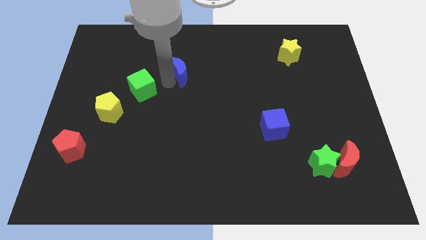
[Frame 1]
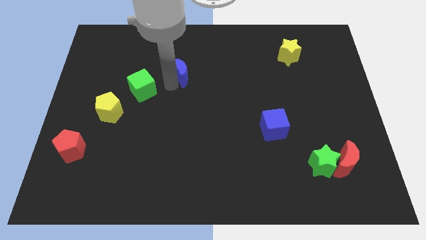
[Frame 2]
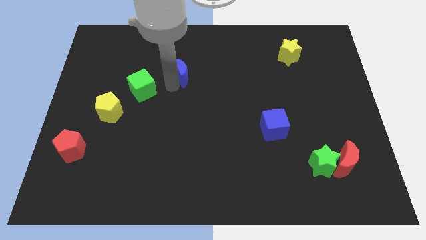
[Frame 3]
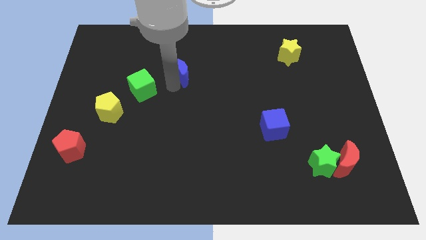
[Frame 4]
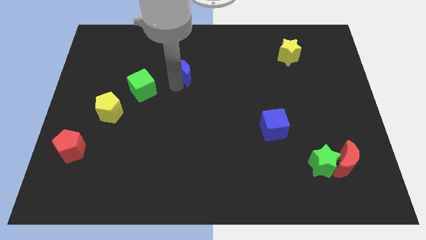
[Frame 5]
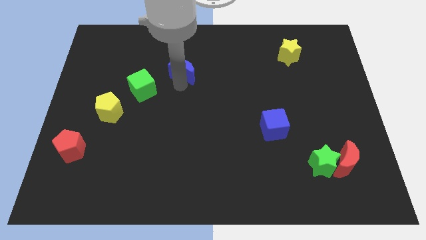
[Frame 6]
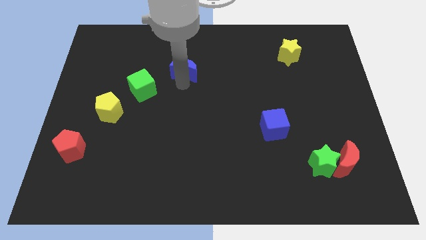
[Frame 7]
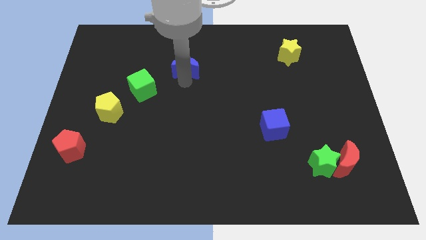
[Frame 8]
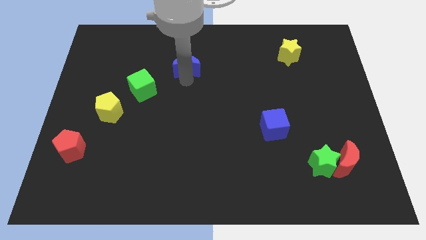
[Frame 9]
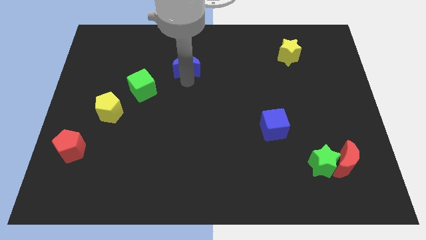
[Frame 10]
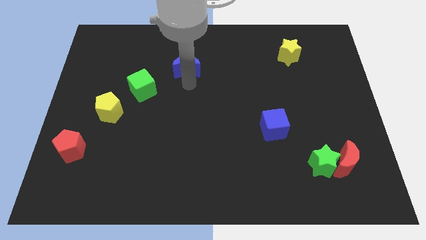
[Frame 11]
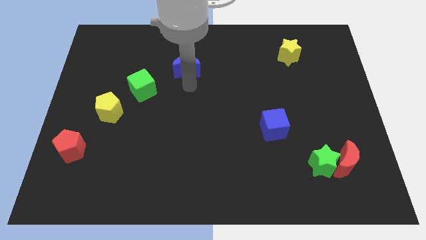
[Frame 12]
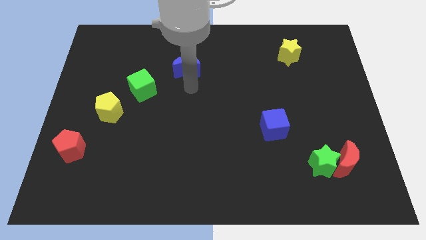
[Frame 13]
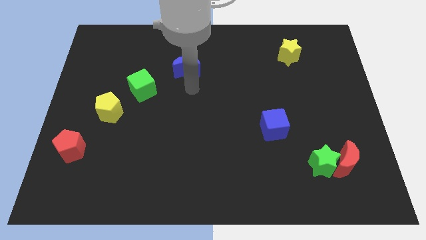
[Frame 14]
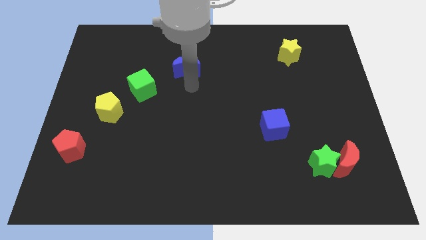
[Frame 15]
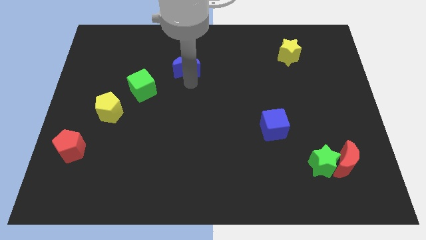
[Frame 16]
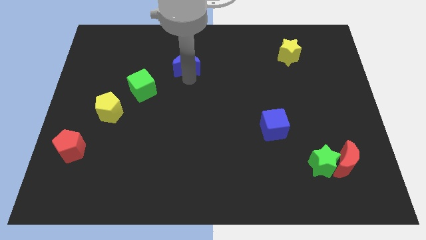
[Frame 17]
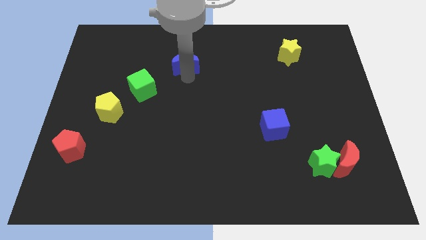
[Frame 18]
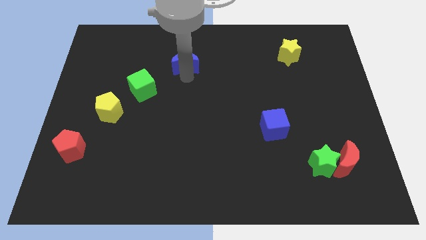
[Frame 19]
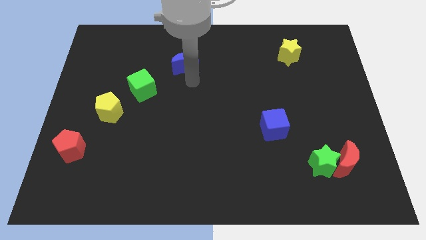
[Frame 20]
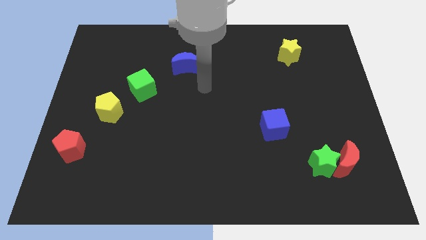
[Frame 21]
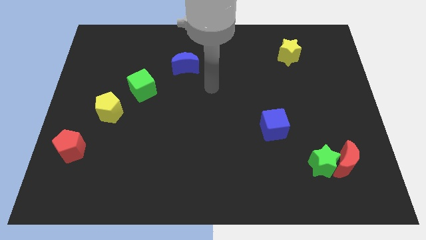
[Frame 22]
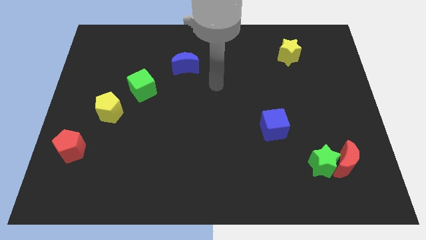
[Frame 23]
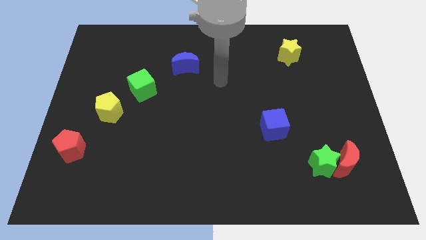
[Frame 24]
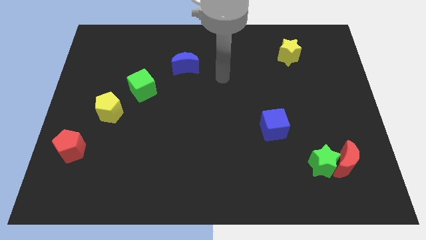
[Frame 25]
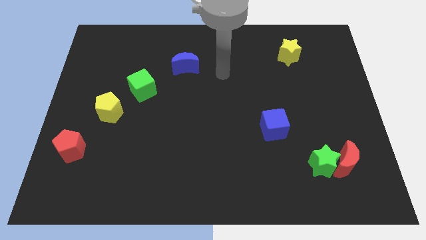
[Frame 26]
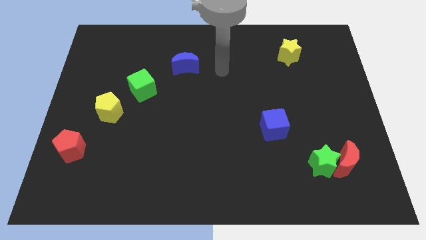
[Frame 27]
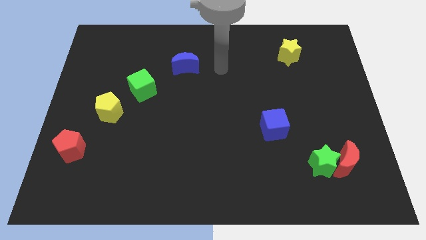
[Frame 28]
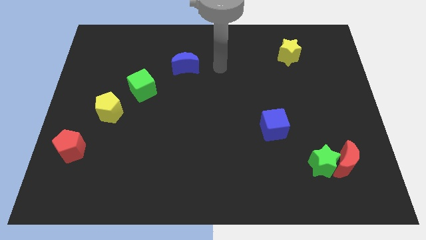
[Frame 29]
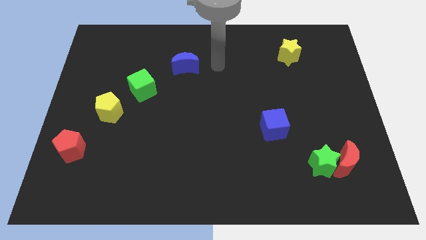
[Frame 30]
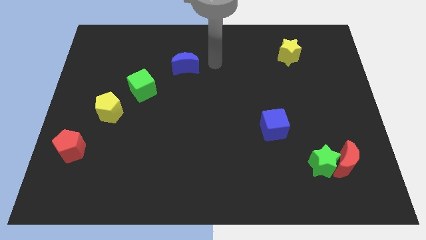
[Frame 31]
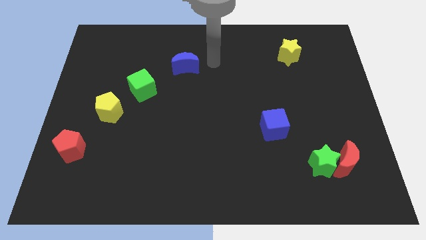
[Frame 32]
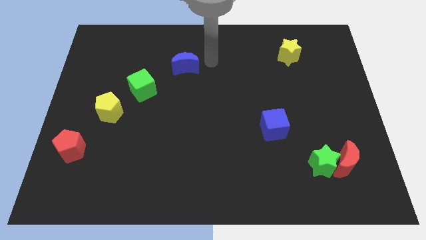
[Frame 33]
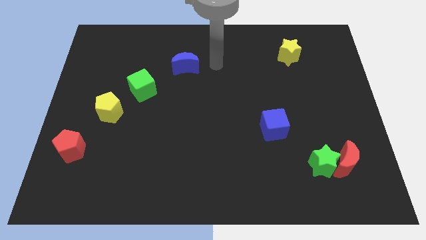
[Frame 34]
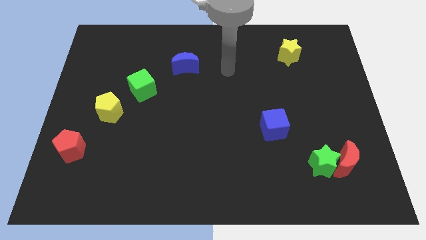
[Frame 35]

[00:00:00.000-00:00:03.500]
place blue moon diagonally right to green cube

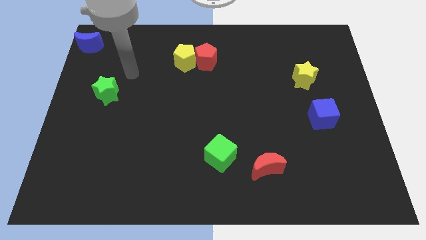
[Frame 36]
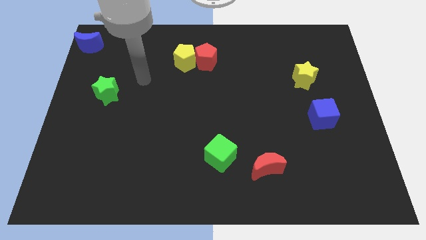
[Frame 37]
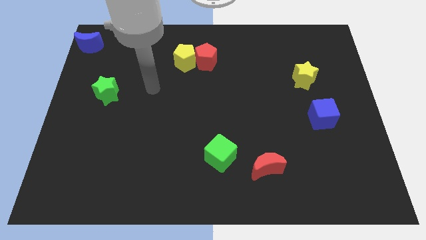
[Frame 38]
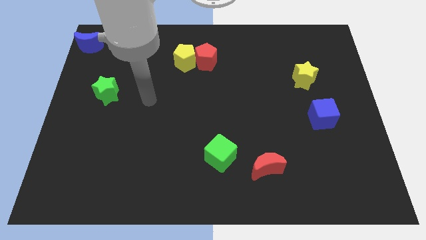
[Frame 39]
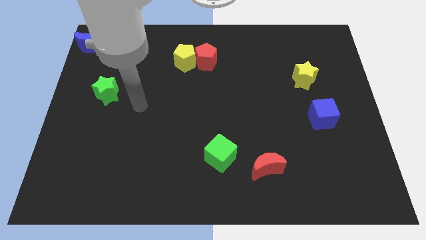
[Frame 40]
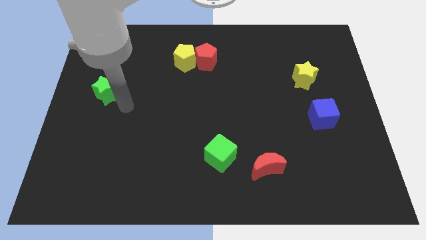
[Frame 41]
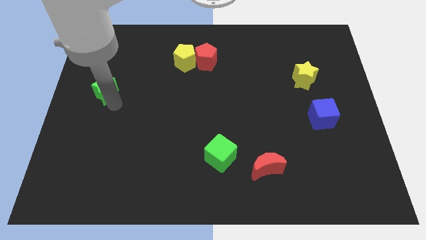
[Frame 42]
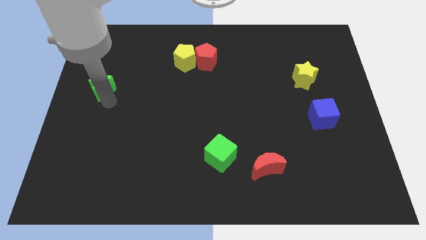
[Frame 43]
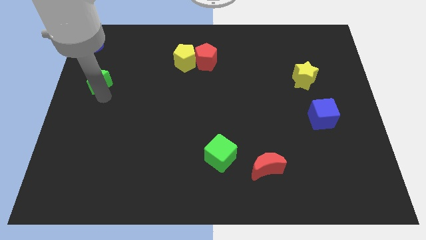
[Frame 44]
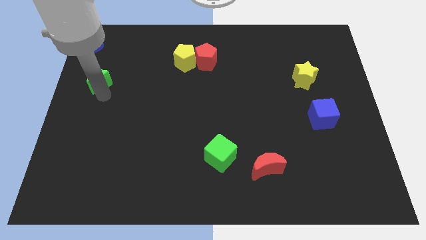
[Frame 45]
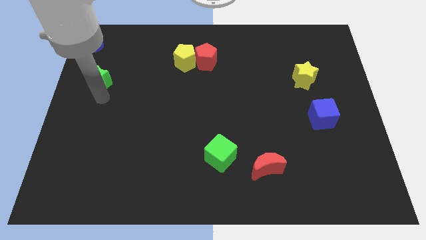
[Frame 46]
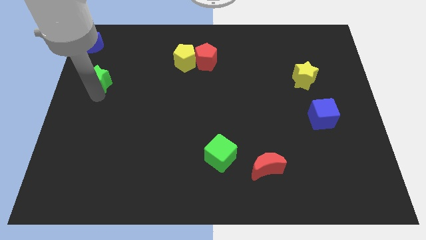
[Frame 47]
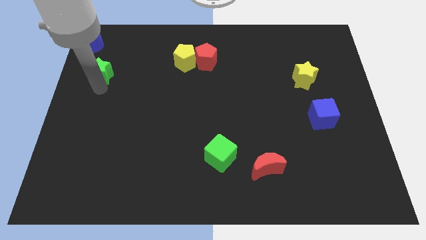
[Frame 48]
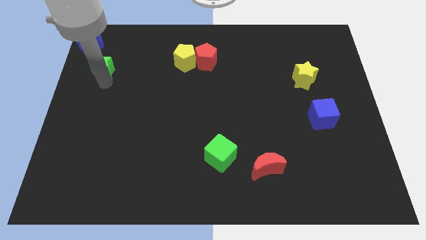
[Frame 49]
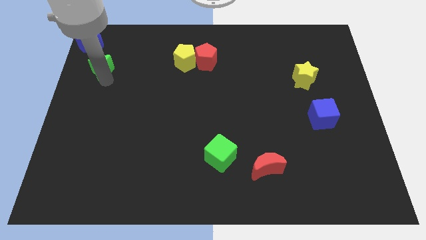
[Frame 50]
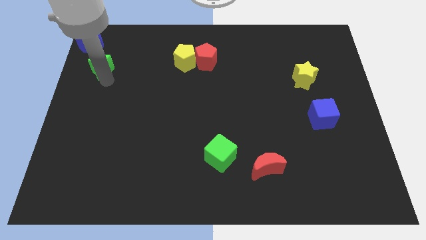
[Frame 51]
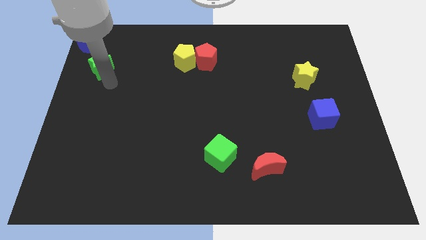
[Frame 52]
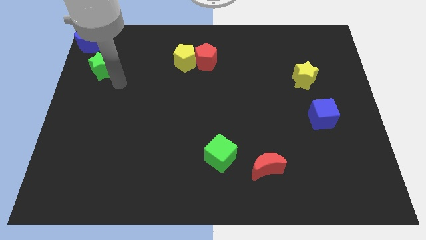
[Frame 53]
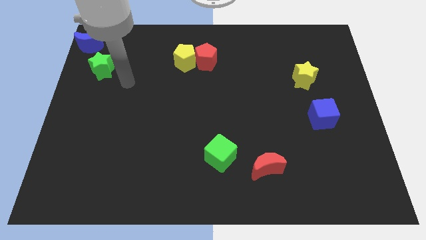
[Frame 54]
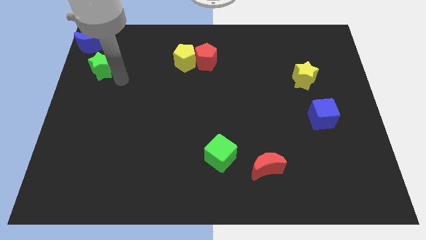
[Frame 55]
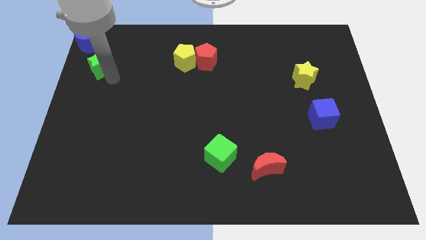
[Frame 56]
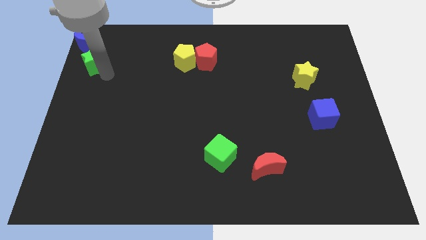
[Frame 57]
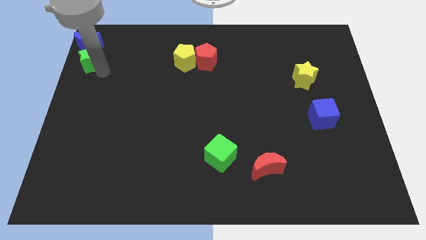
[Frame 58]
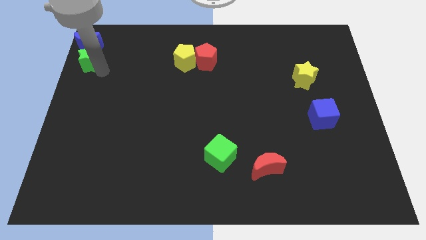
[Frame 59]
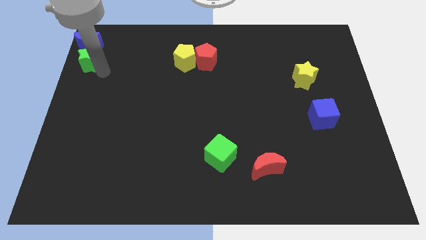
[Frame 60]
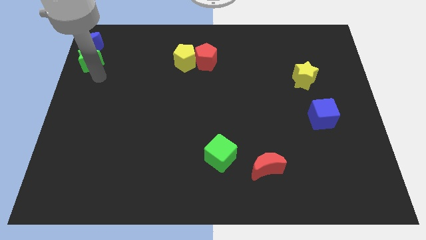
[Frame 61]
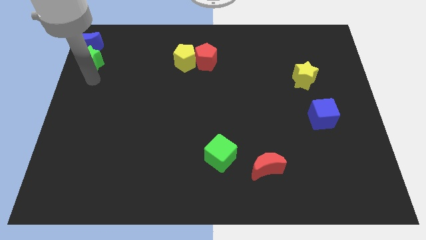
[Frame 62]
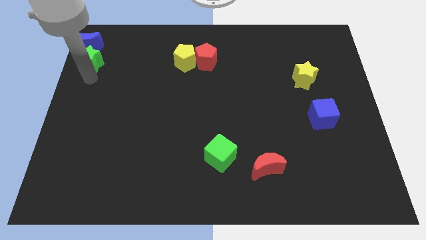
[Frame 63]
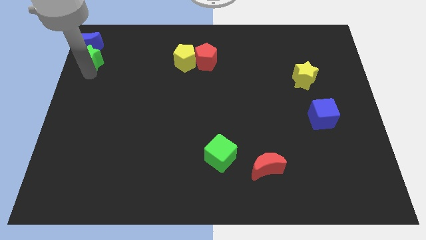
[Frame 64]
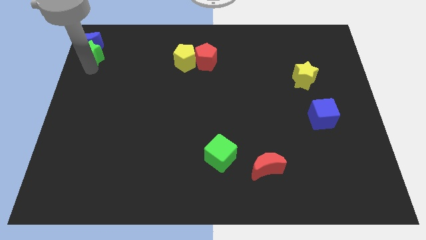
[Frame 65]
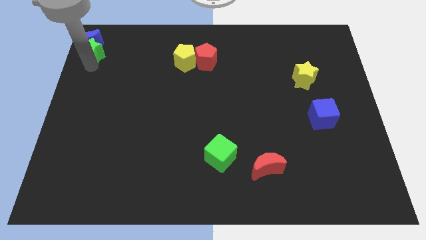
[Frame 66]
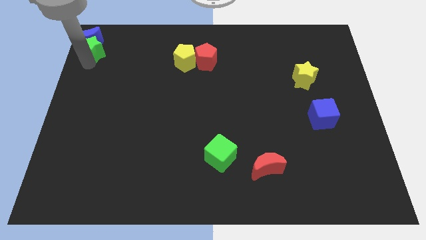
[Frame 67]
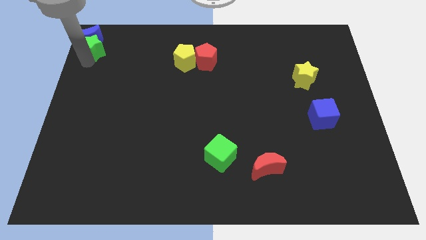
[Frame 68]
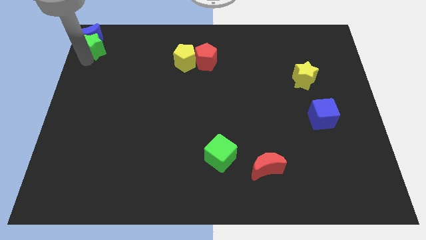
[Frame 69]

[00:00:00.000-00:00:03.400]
move the green star into the blue moon

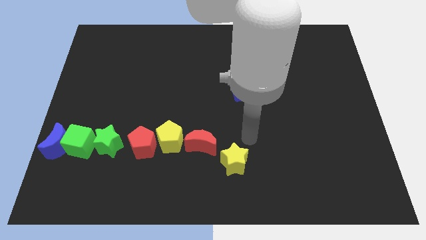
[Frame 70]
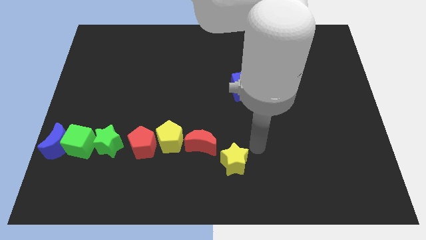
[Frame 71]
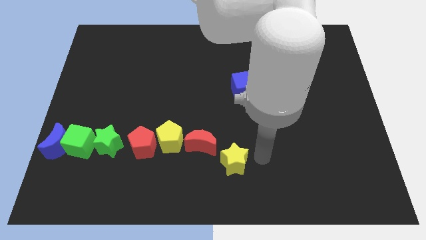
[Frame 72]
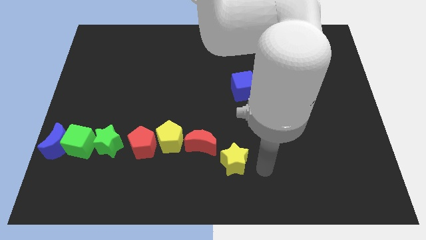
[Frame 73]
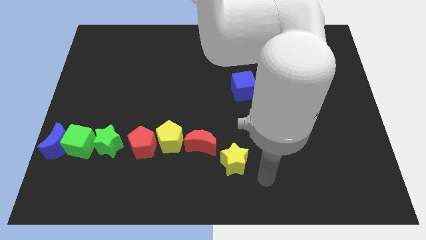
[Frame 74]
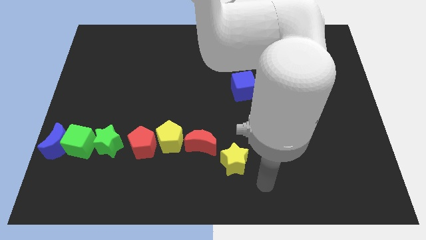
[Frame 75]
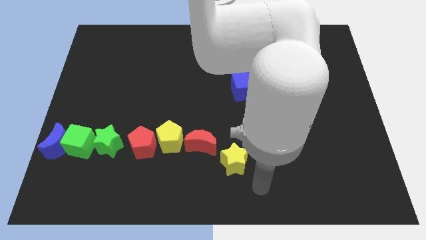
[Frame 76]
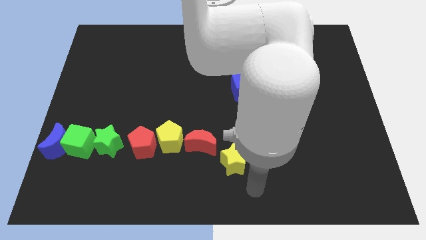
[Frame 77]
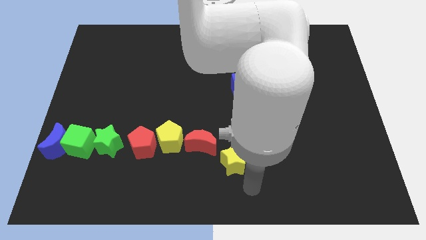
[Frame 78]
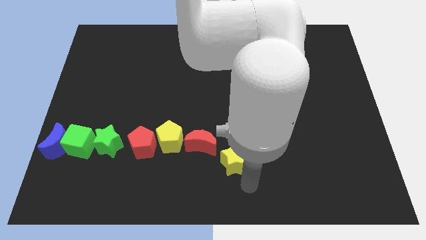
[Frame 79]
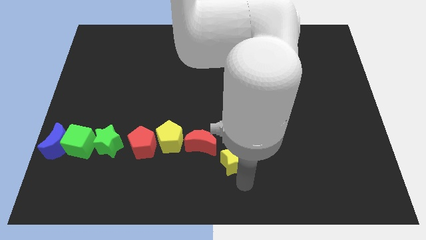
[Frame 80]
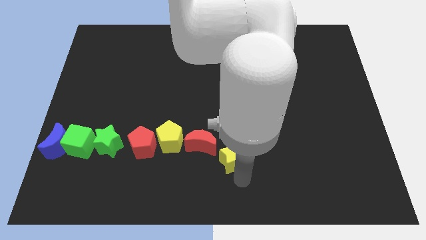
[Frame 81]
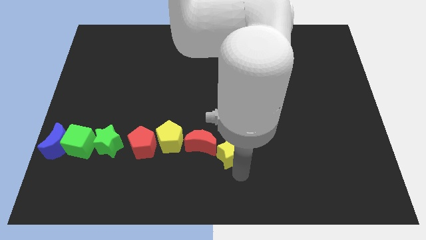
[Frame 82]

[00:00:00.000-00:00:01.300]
move your arm to the bottom of the yellow star

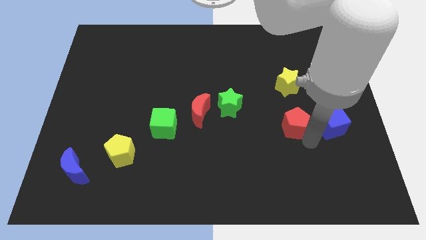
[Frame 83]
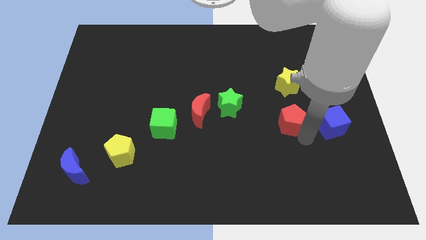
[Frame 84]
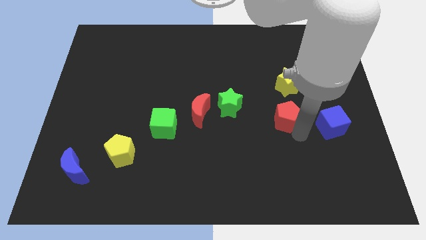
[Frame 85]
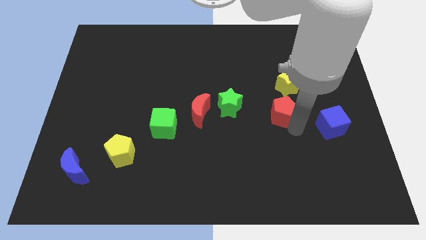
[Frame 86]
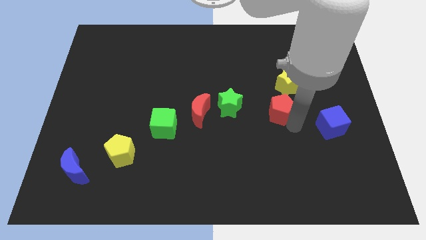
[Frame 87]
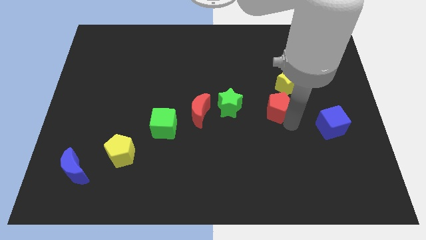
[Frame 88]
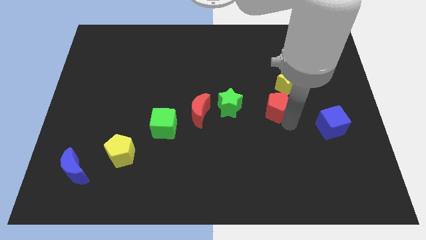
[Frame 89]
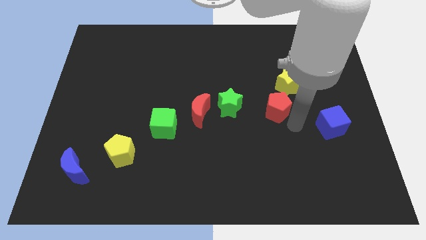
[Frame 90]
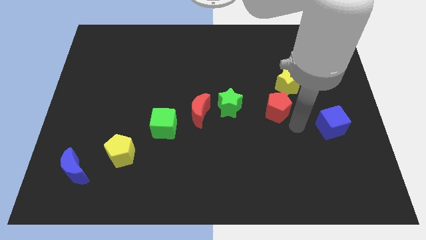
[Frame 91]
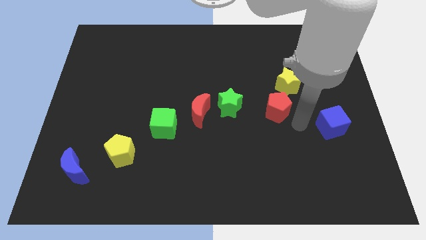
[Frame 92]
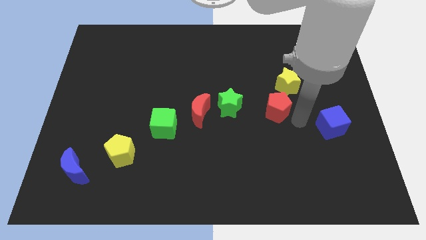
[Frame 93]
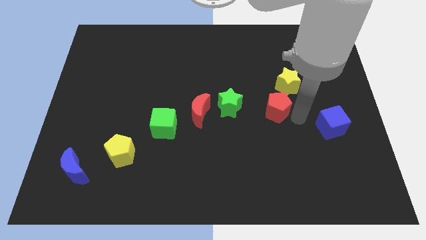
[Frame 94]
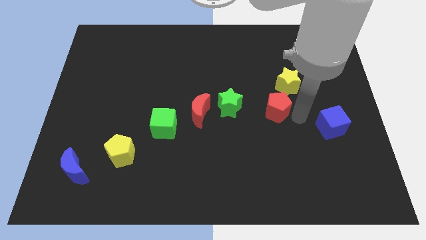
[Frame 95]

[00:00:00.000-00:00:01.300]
move the red pentagon diagonally to the right of the green star
